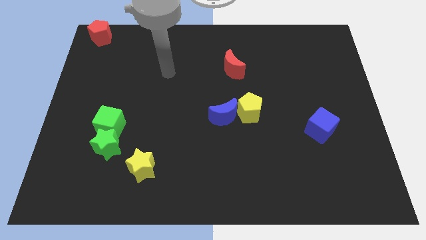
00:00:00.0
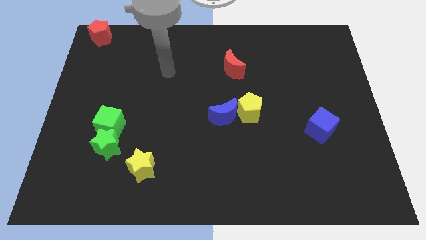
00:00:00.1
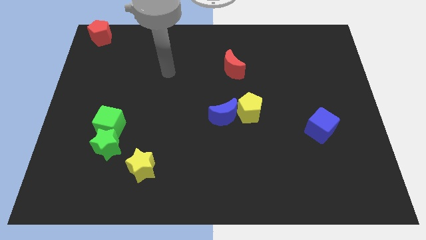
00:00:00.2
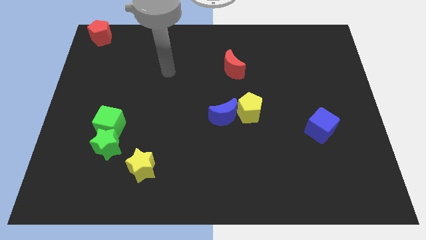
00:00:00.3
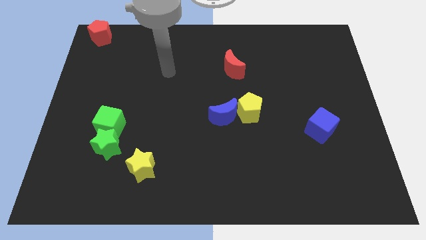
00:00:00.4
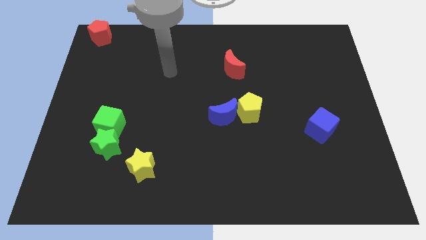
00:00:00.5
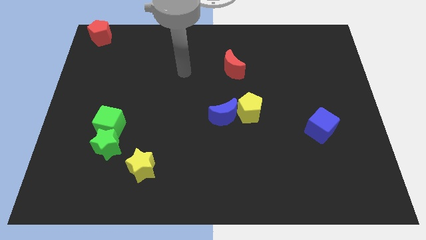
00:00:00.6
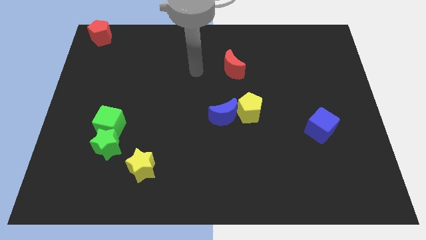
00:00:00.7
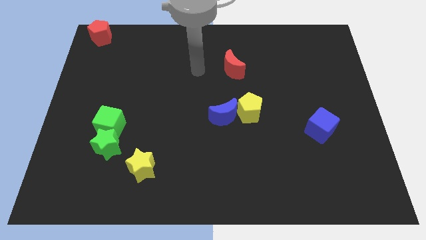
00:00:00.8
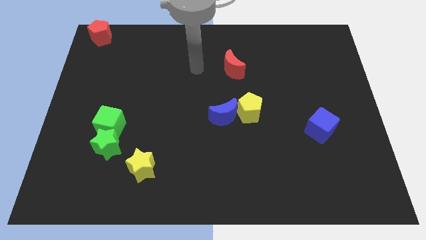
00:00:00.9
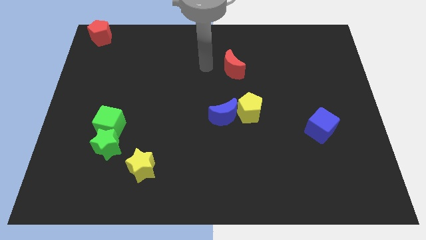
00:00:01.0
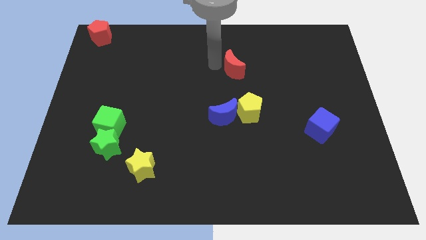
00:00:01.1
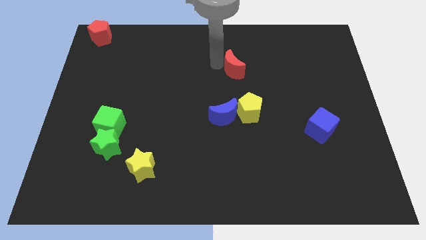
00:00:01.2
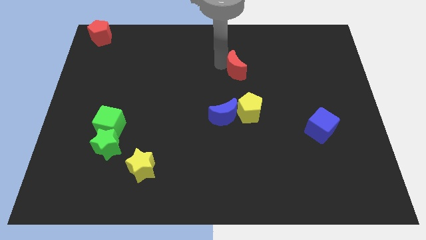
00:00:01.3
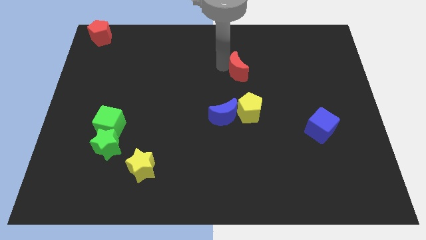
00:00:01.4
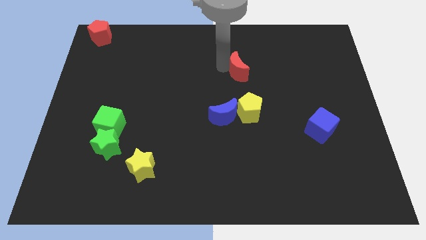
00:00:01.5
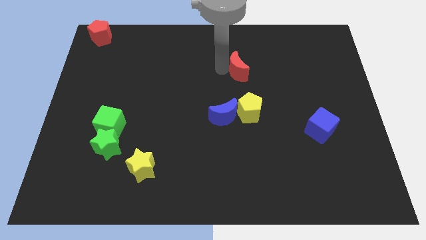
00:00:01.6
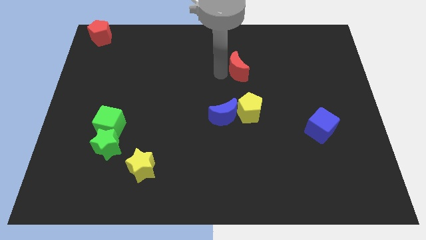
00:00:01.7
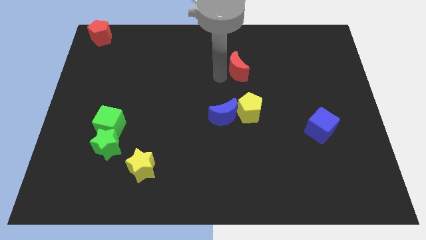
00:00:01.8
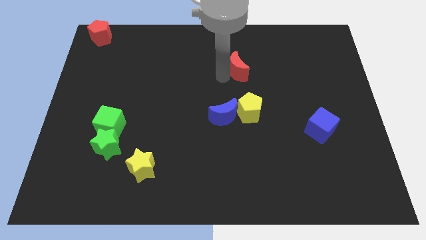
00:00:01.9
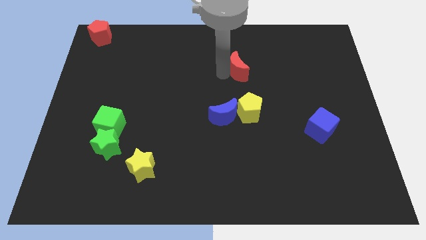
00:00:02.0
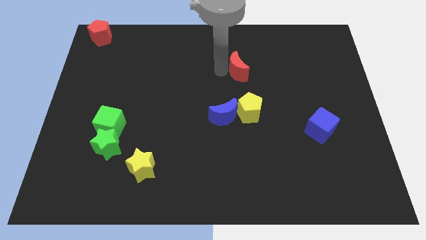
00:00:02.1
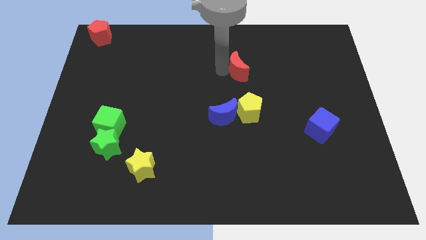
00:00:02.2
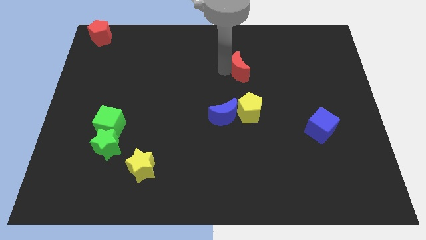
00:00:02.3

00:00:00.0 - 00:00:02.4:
move the red crescent slightly to the right

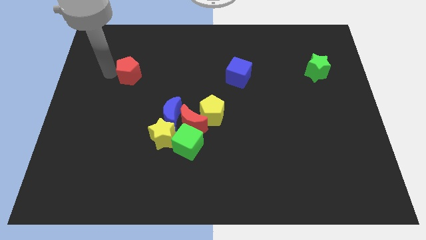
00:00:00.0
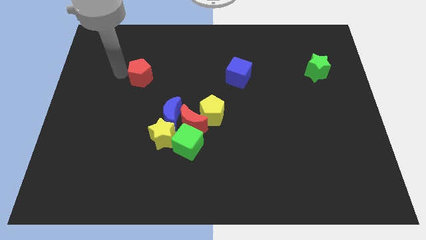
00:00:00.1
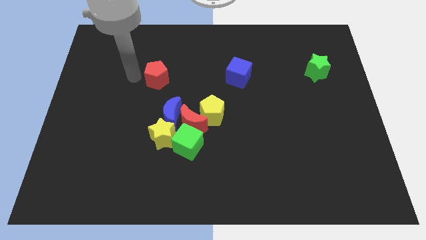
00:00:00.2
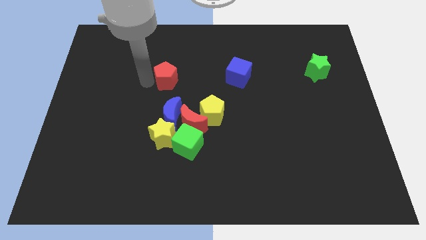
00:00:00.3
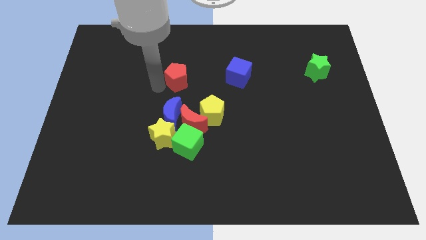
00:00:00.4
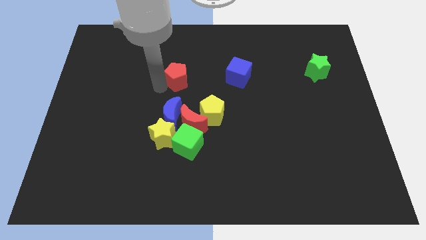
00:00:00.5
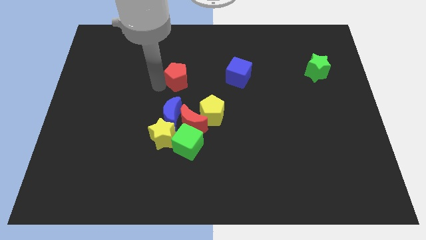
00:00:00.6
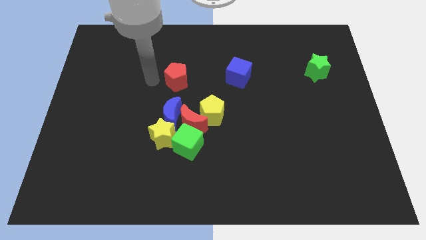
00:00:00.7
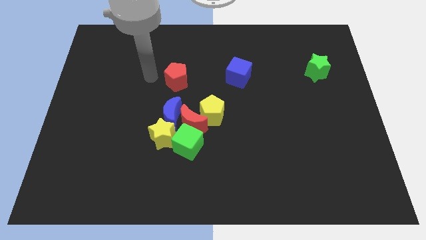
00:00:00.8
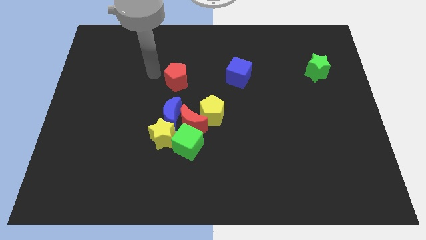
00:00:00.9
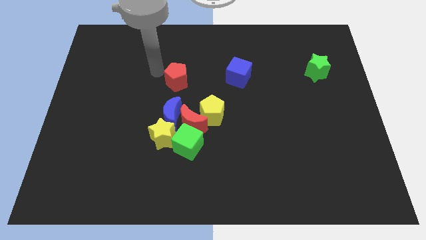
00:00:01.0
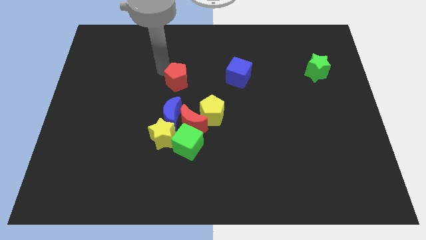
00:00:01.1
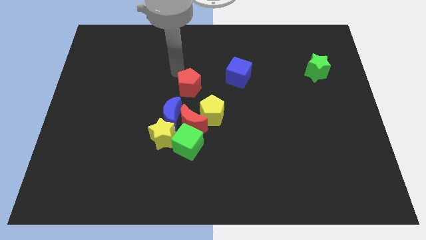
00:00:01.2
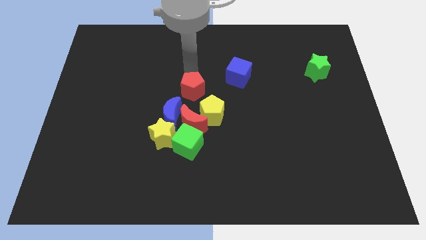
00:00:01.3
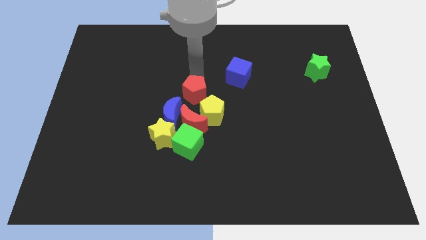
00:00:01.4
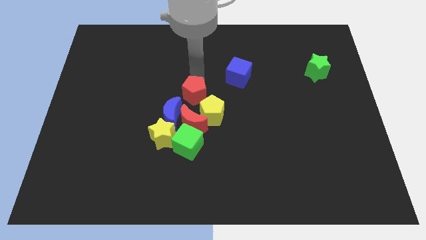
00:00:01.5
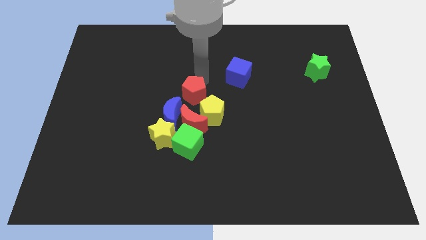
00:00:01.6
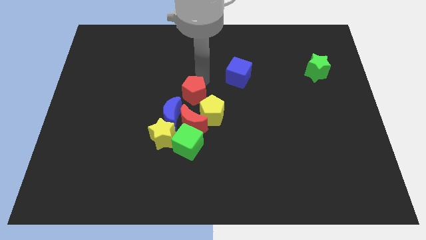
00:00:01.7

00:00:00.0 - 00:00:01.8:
push the red pentagon to the top of red crescent

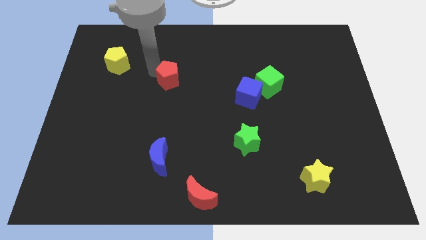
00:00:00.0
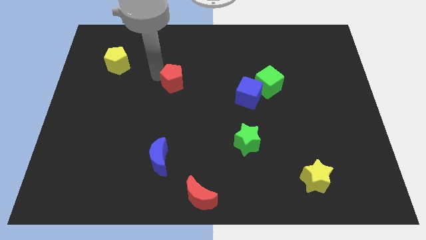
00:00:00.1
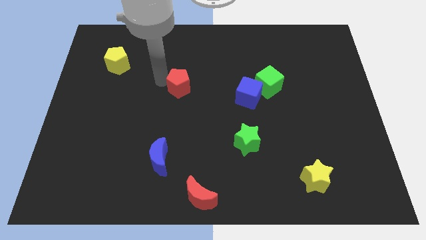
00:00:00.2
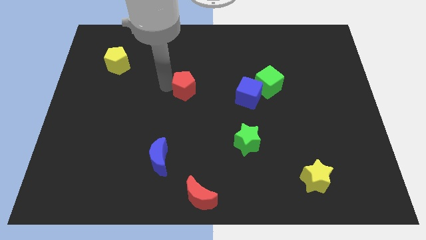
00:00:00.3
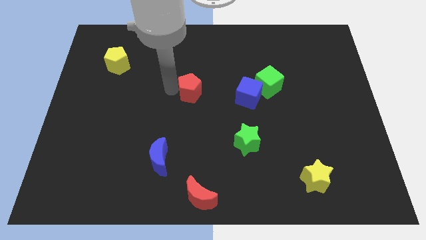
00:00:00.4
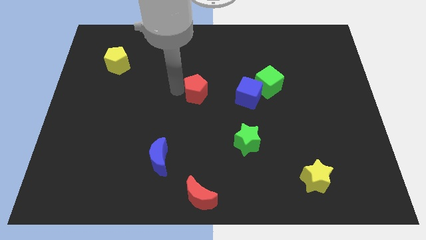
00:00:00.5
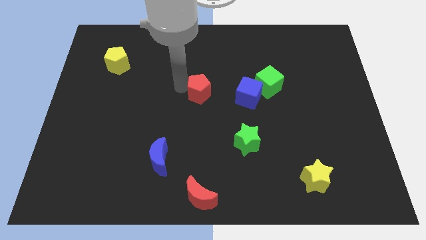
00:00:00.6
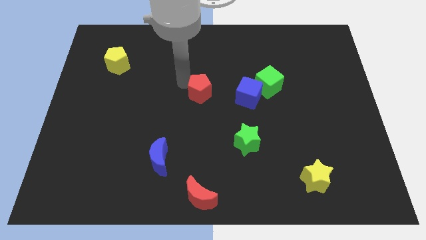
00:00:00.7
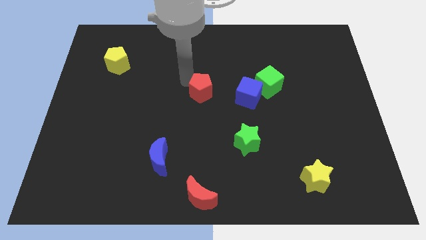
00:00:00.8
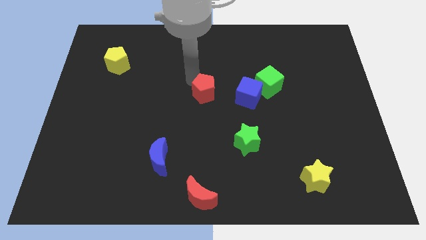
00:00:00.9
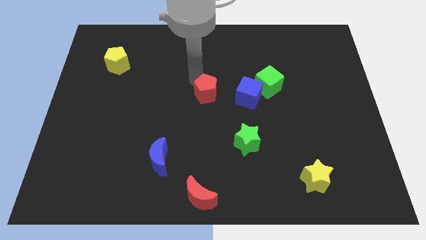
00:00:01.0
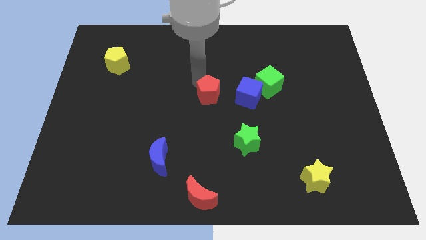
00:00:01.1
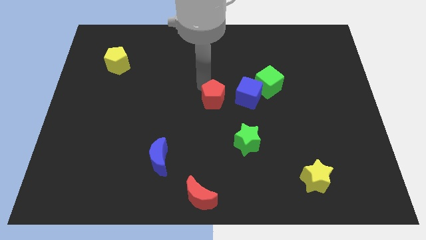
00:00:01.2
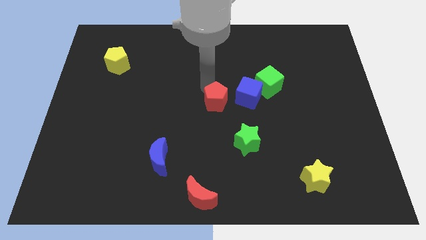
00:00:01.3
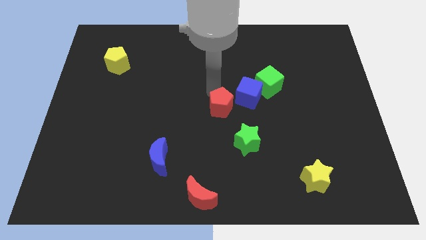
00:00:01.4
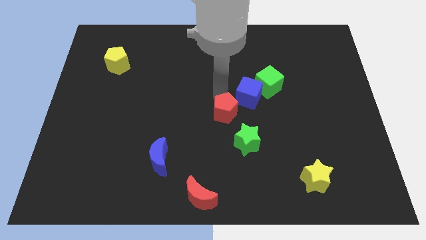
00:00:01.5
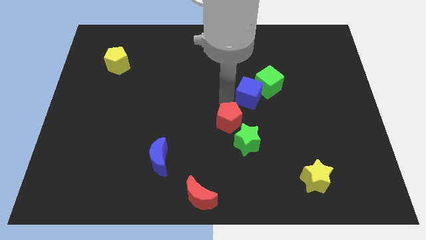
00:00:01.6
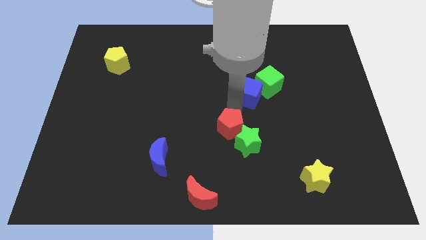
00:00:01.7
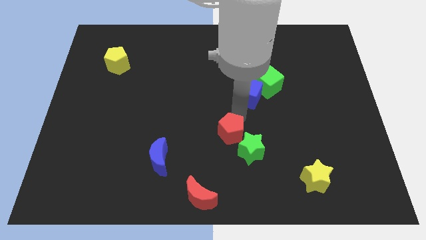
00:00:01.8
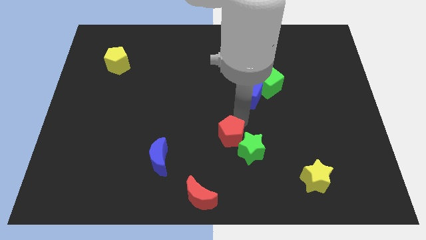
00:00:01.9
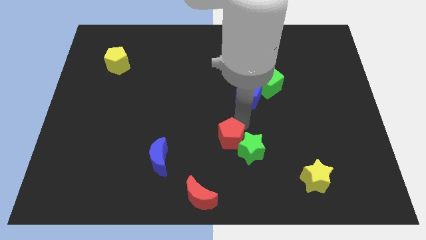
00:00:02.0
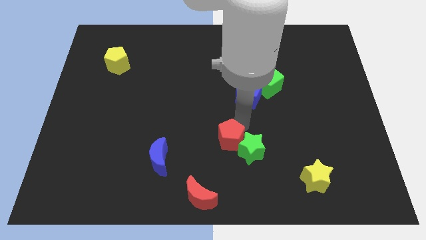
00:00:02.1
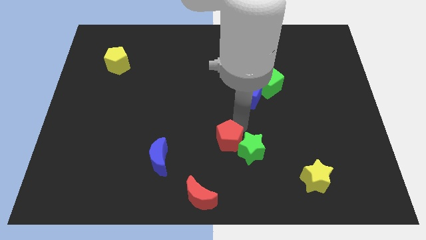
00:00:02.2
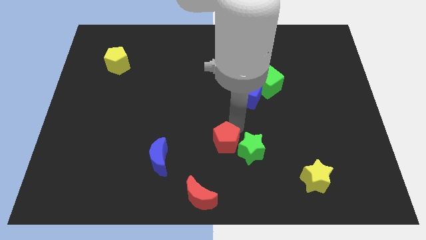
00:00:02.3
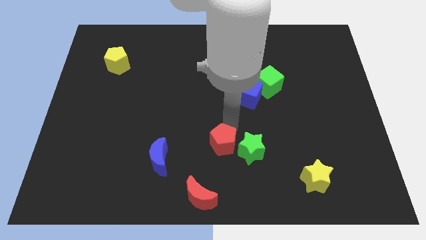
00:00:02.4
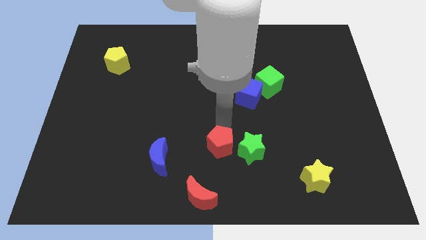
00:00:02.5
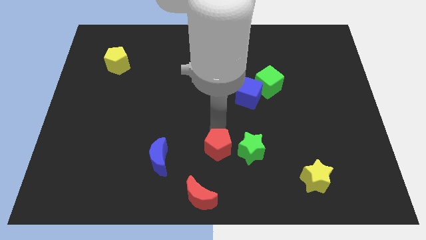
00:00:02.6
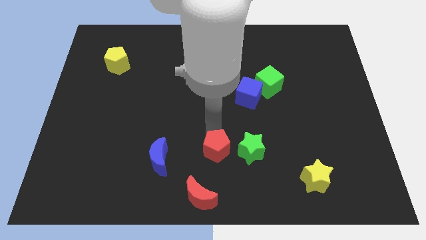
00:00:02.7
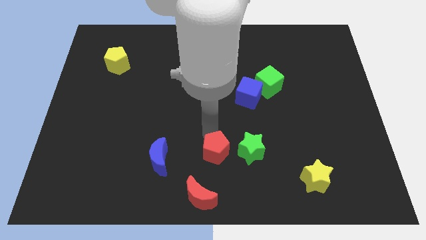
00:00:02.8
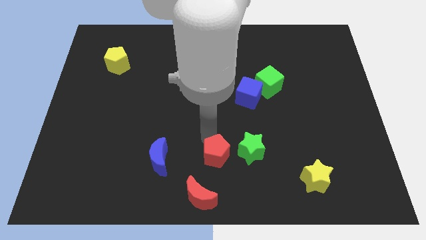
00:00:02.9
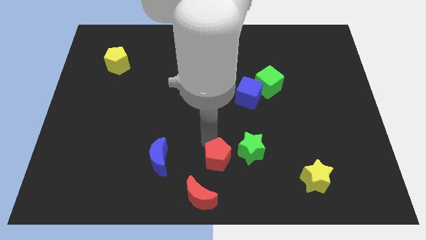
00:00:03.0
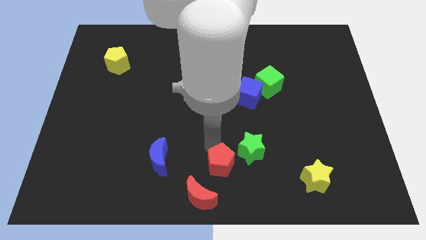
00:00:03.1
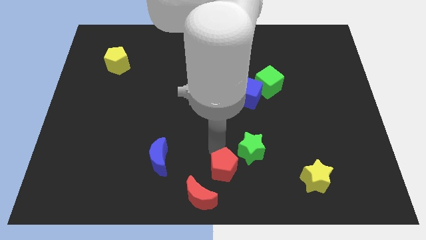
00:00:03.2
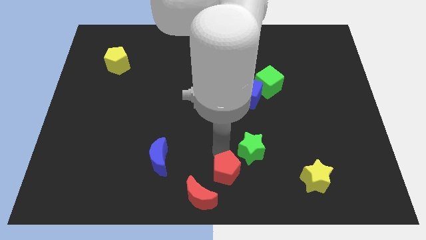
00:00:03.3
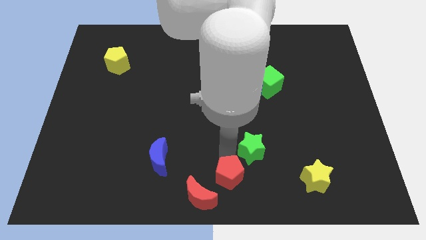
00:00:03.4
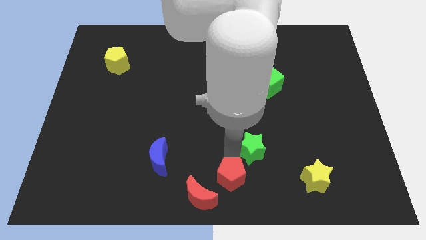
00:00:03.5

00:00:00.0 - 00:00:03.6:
place the red pentagon in between the red moon and green star

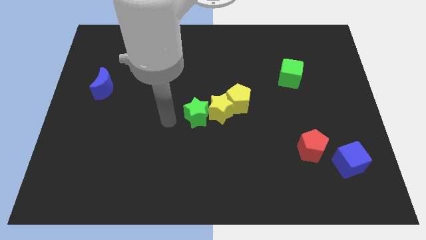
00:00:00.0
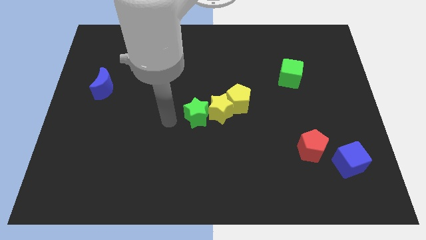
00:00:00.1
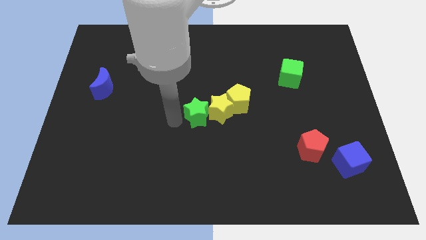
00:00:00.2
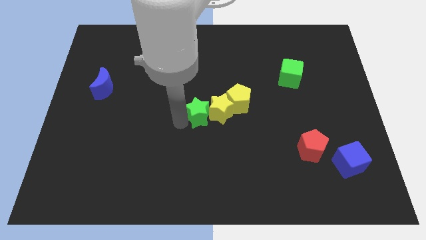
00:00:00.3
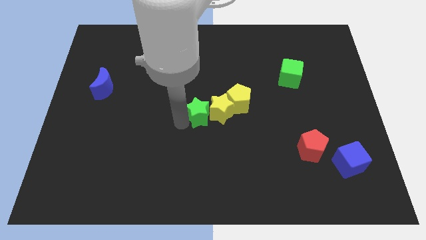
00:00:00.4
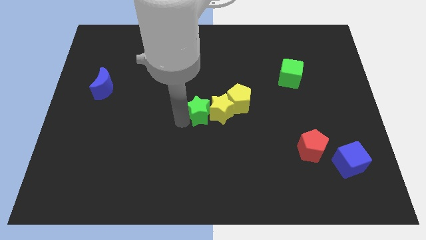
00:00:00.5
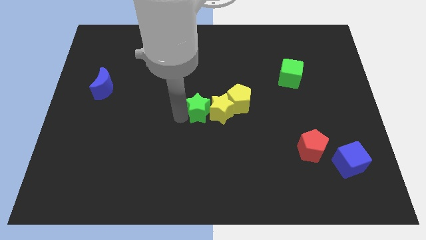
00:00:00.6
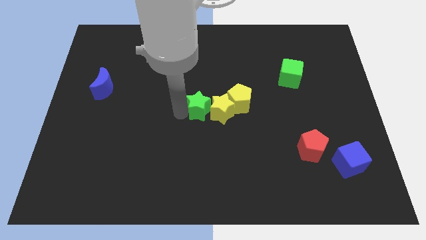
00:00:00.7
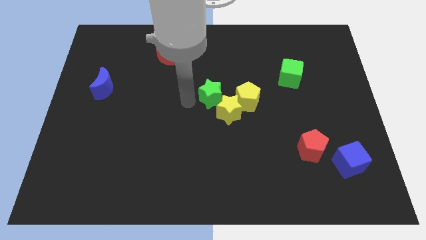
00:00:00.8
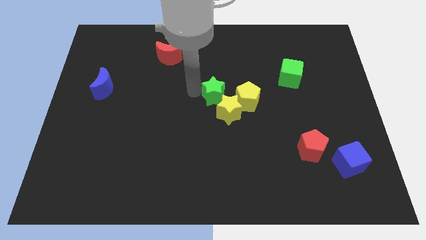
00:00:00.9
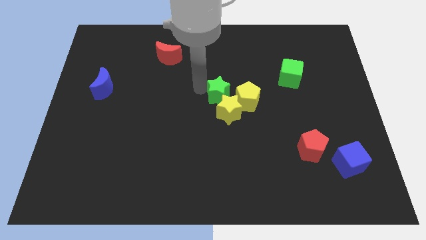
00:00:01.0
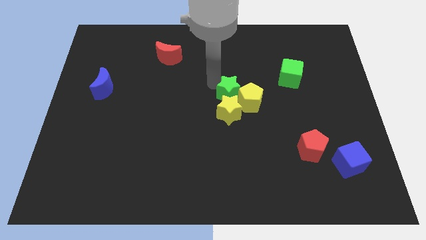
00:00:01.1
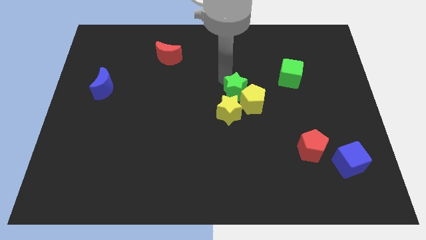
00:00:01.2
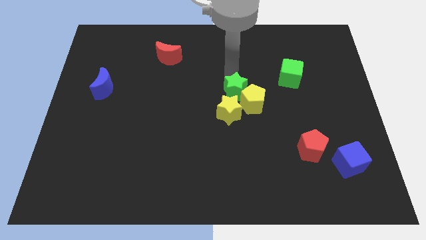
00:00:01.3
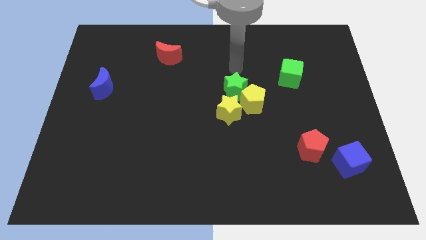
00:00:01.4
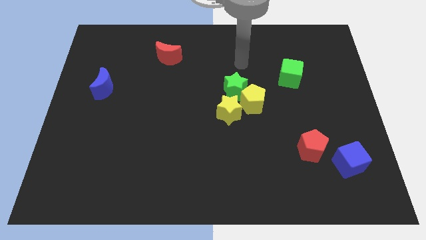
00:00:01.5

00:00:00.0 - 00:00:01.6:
move the green star into yellow blocks
